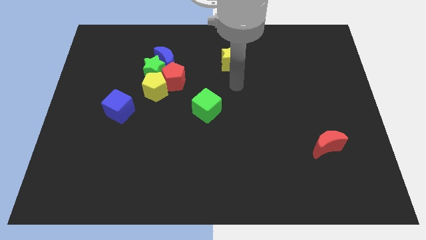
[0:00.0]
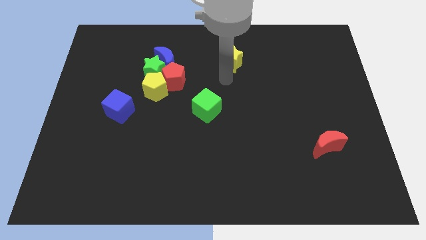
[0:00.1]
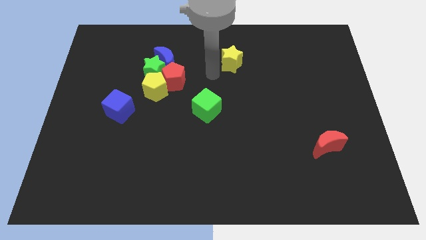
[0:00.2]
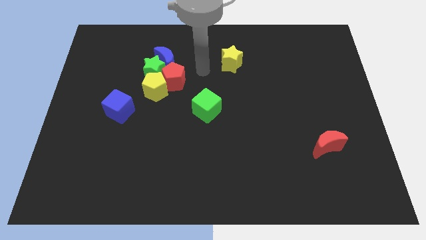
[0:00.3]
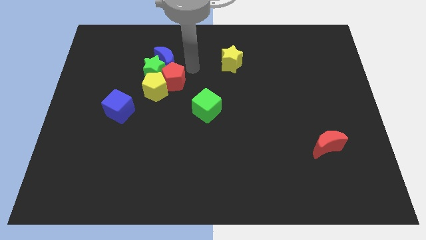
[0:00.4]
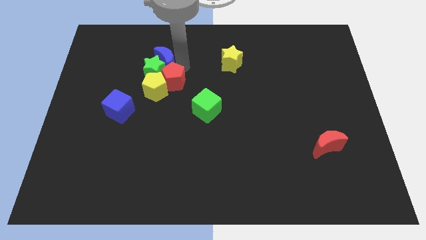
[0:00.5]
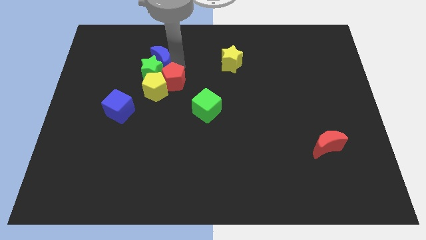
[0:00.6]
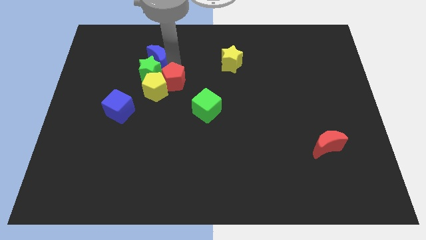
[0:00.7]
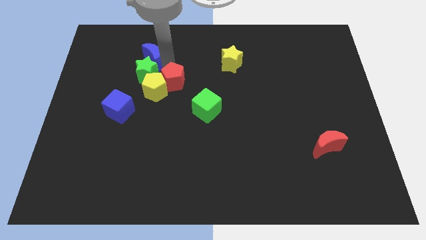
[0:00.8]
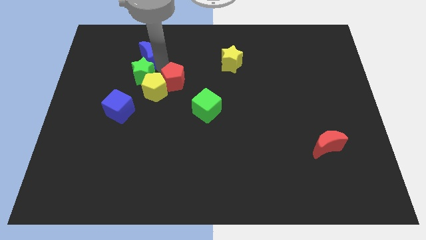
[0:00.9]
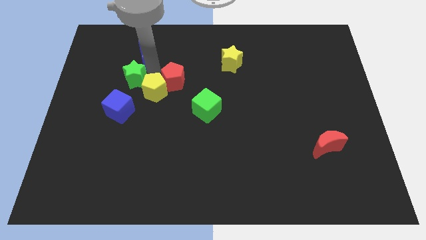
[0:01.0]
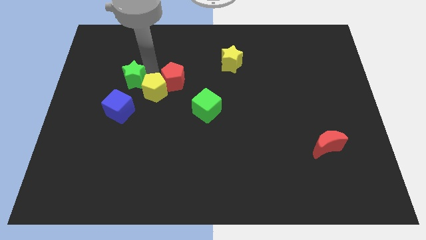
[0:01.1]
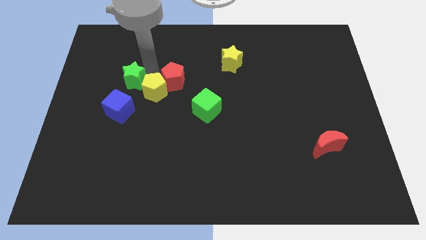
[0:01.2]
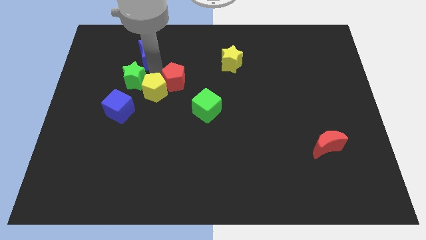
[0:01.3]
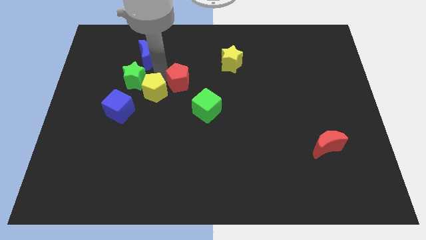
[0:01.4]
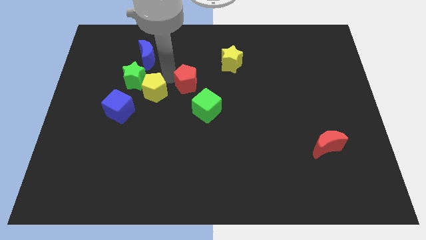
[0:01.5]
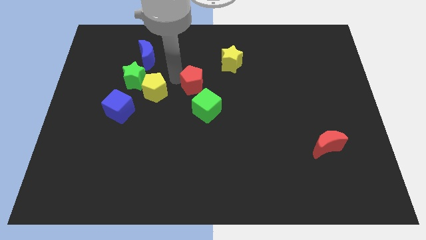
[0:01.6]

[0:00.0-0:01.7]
separate the yellow pentagon and red pentagon

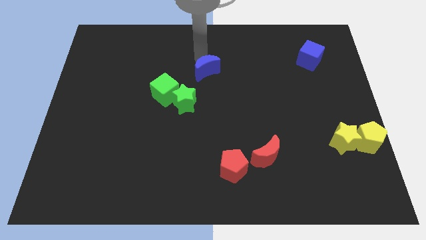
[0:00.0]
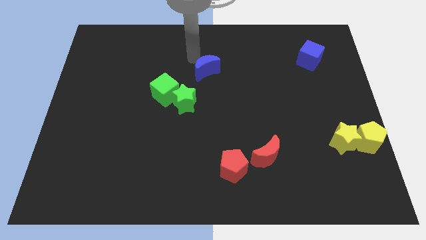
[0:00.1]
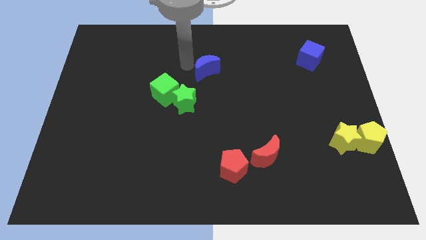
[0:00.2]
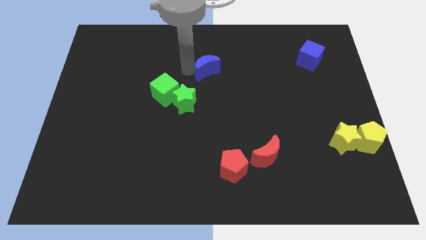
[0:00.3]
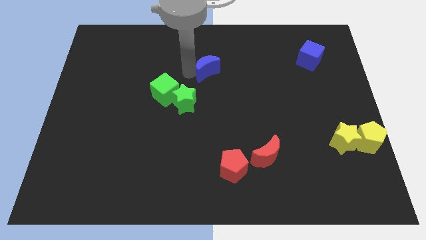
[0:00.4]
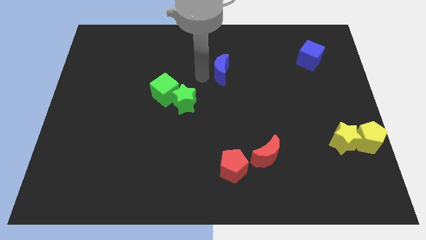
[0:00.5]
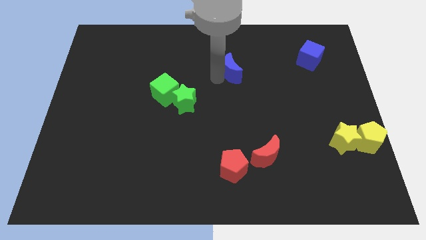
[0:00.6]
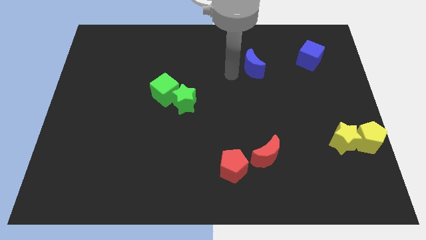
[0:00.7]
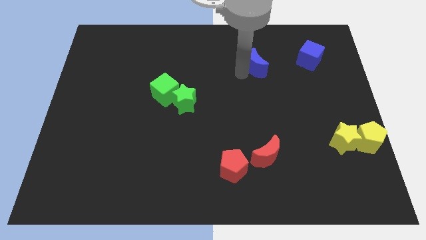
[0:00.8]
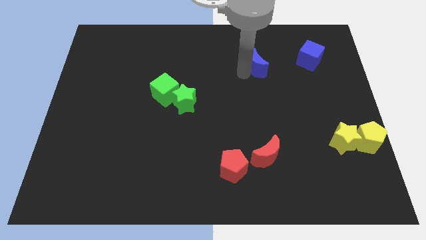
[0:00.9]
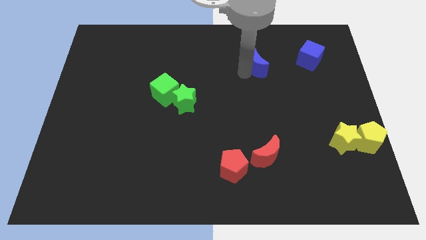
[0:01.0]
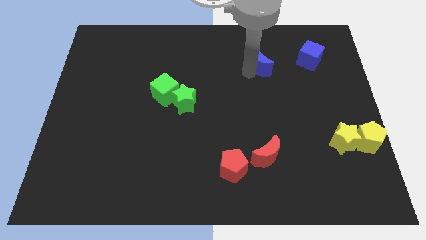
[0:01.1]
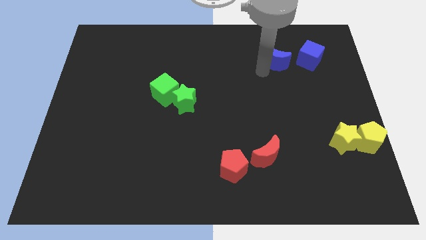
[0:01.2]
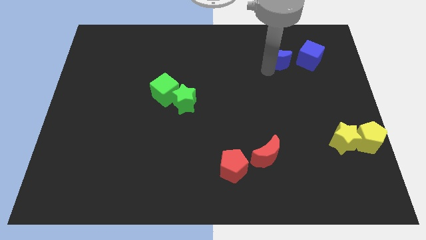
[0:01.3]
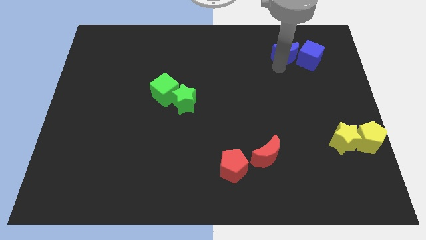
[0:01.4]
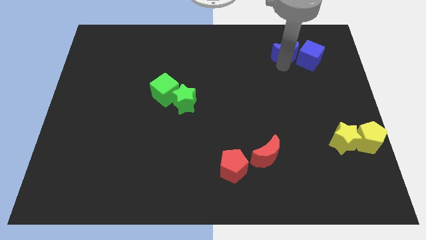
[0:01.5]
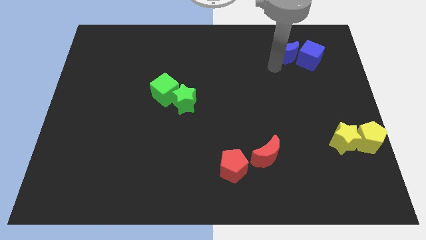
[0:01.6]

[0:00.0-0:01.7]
move blue moon towards blue cube

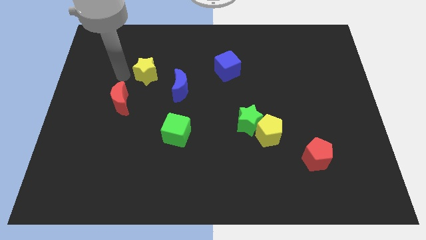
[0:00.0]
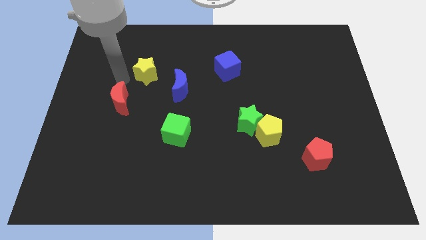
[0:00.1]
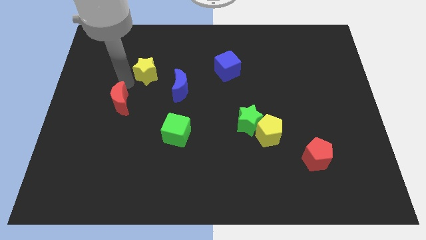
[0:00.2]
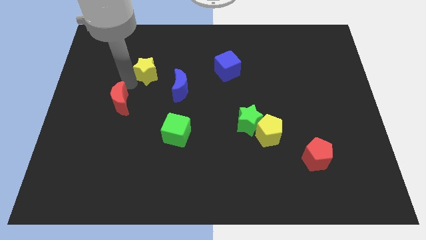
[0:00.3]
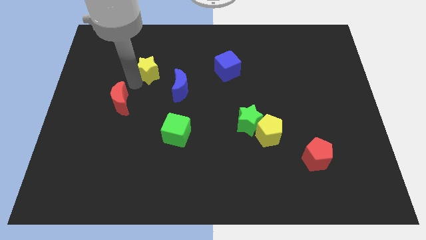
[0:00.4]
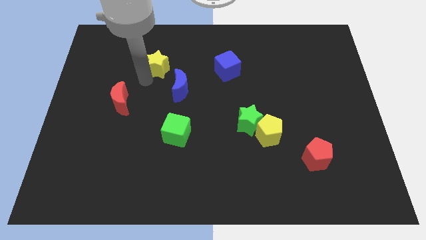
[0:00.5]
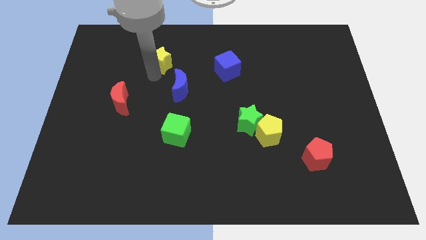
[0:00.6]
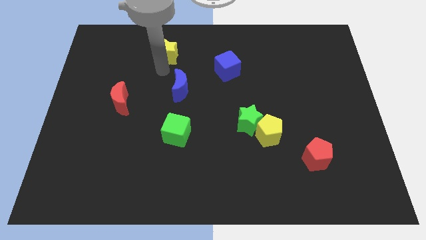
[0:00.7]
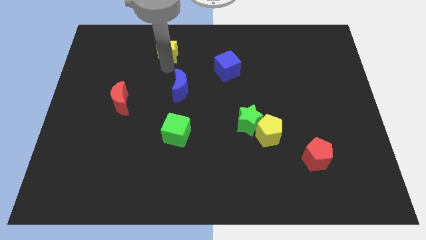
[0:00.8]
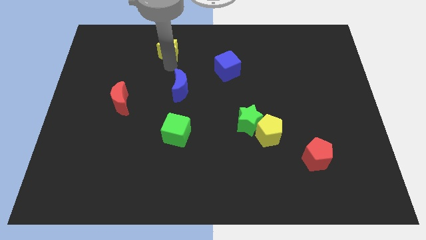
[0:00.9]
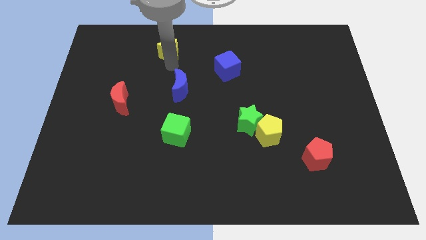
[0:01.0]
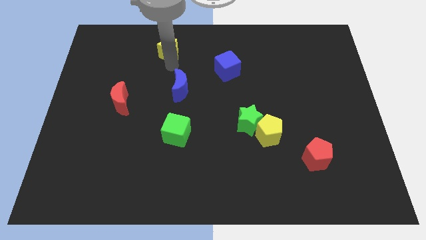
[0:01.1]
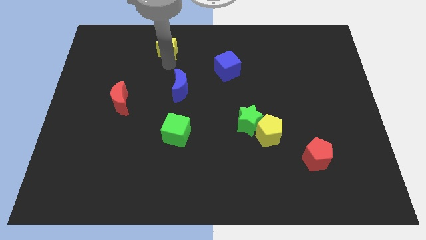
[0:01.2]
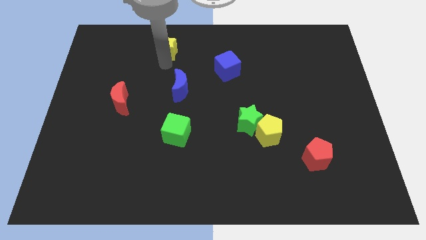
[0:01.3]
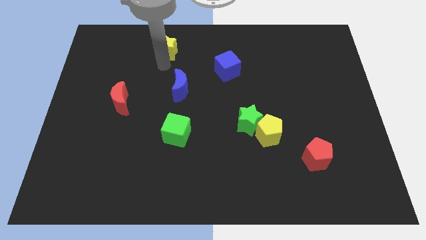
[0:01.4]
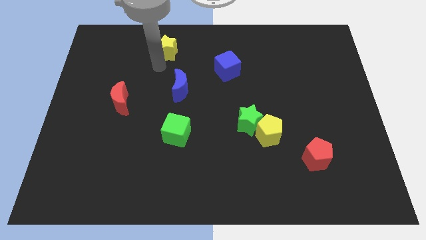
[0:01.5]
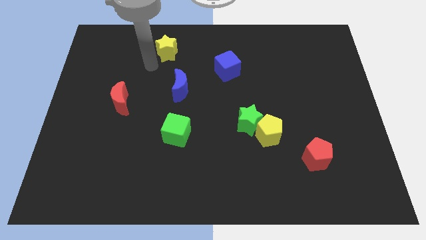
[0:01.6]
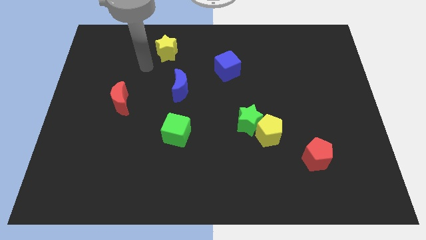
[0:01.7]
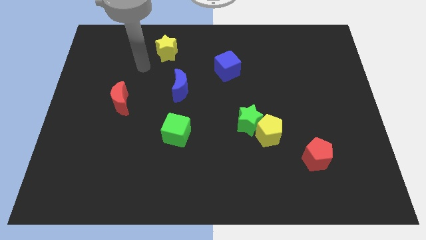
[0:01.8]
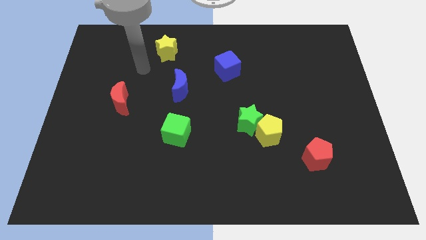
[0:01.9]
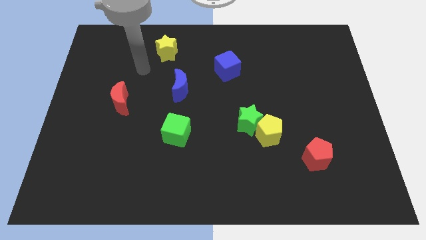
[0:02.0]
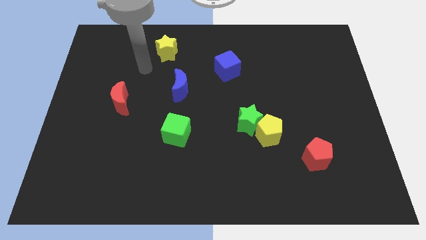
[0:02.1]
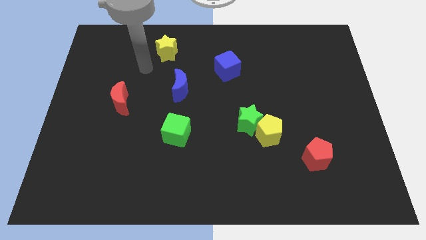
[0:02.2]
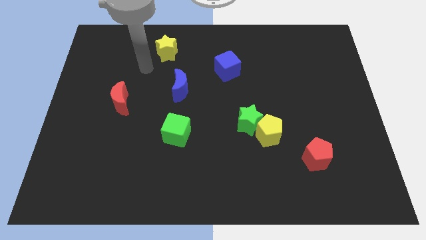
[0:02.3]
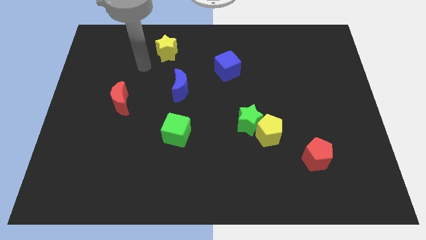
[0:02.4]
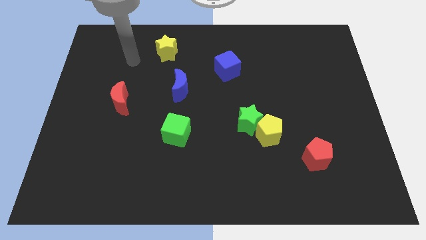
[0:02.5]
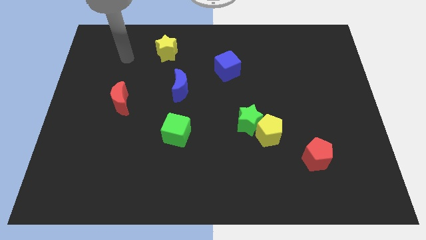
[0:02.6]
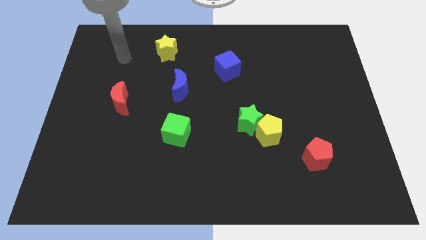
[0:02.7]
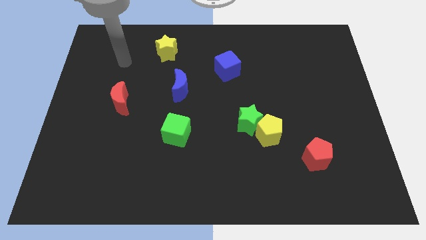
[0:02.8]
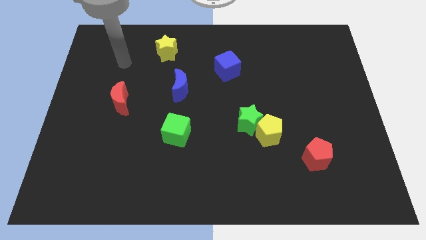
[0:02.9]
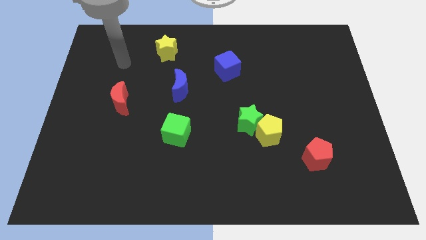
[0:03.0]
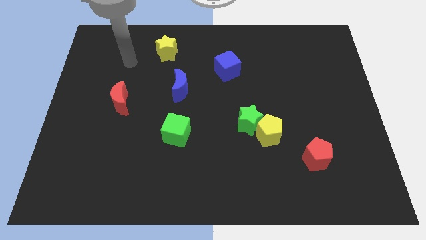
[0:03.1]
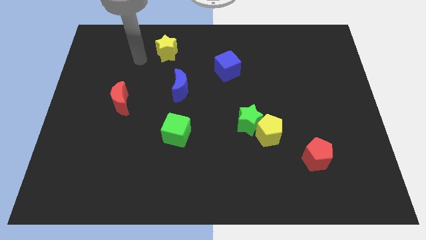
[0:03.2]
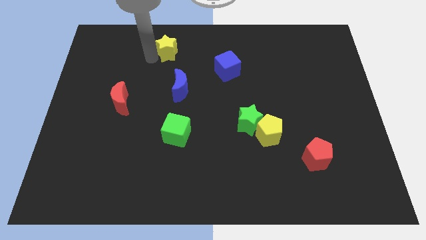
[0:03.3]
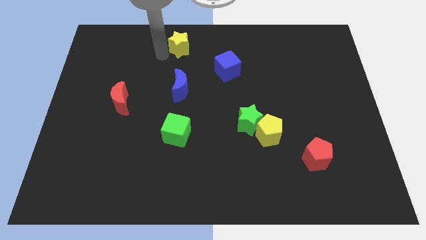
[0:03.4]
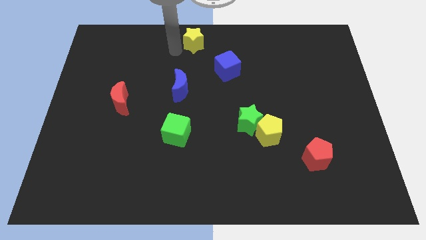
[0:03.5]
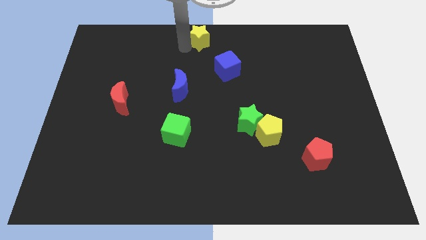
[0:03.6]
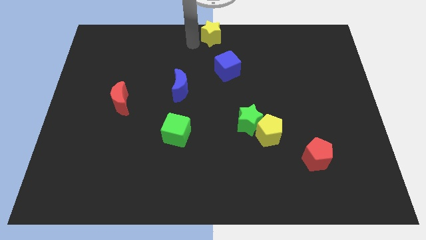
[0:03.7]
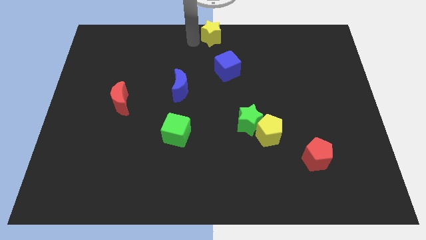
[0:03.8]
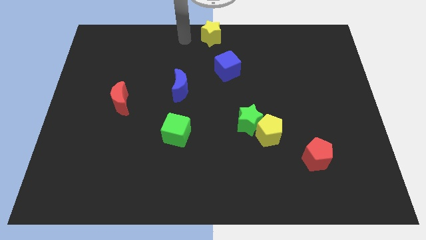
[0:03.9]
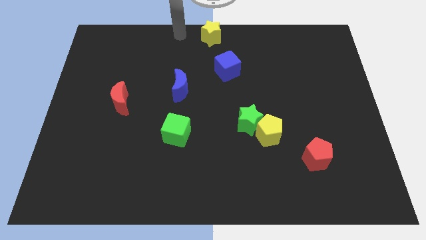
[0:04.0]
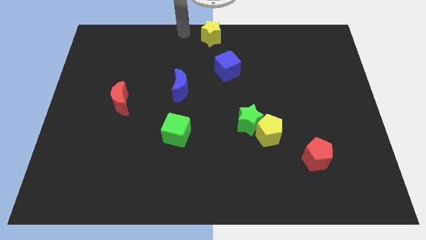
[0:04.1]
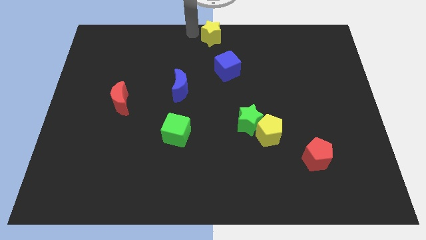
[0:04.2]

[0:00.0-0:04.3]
put the yellow star to the top center of the board

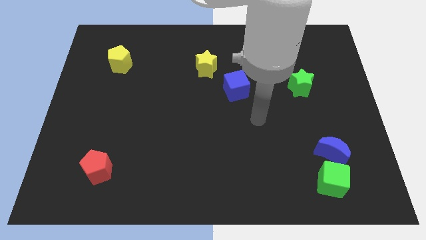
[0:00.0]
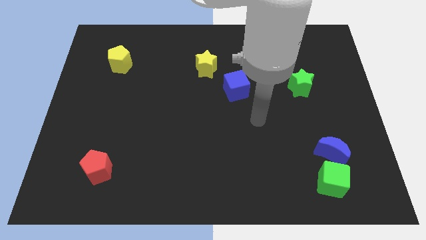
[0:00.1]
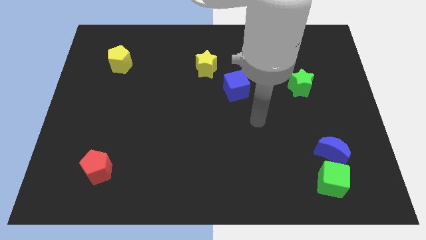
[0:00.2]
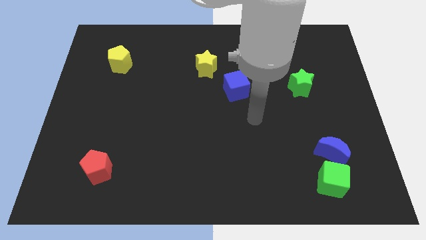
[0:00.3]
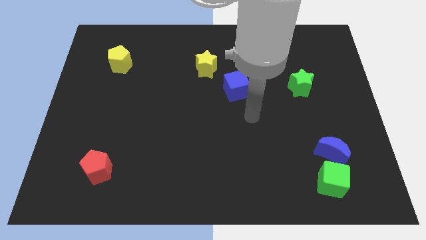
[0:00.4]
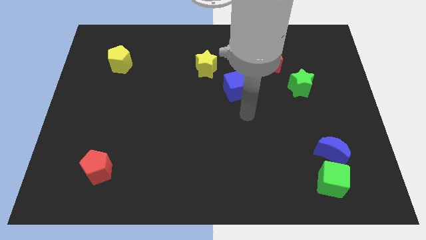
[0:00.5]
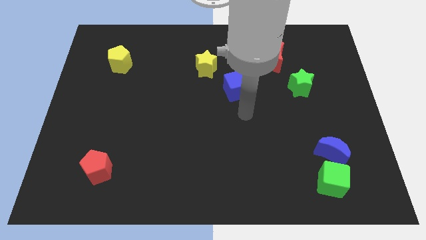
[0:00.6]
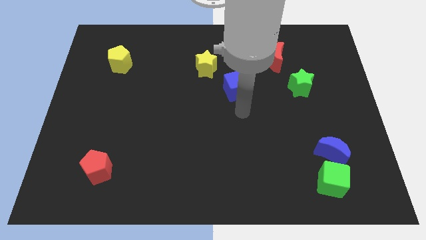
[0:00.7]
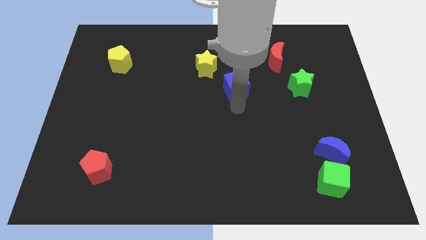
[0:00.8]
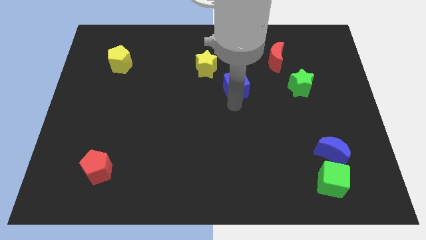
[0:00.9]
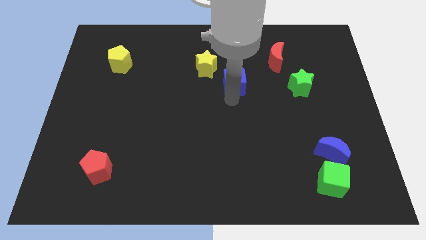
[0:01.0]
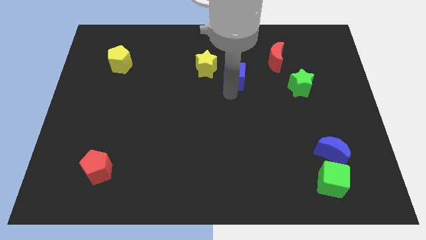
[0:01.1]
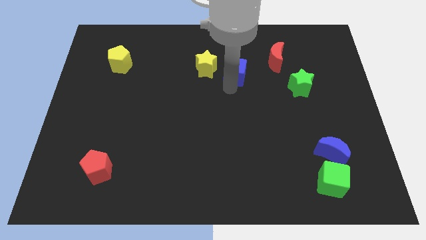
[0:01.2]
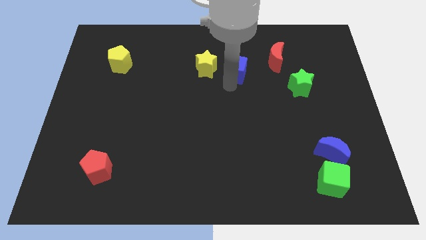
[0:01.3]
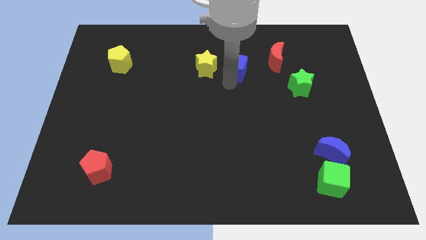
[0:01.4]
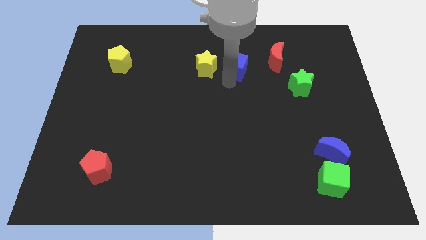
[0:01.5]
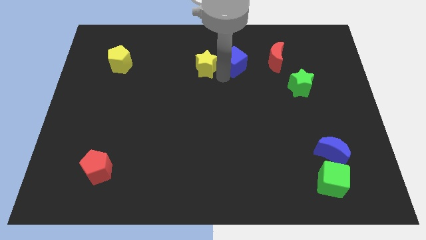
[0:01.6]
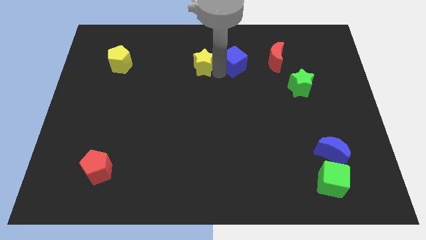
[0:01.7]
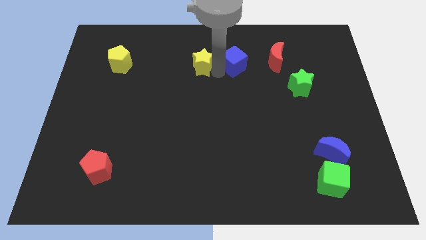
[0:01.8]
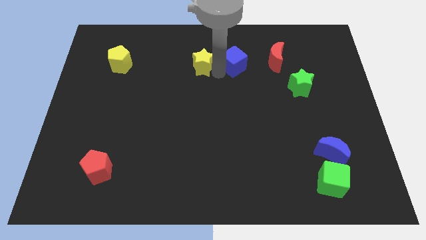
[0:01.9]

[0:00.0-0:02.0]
move the blue cube towards top center
